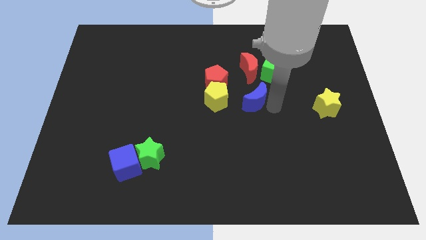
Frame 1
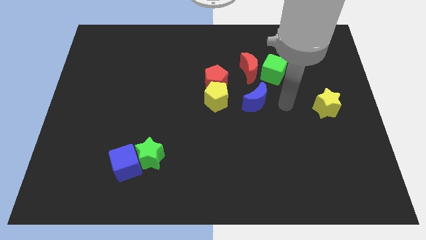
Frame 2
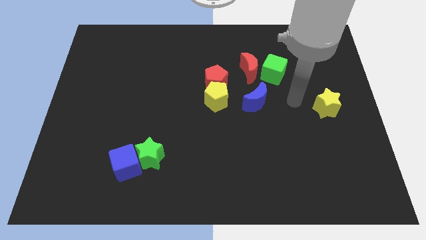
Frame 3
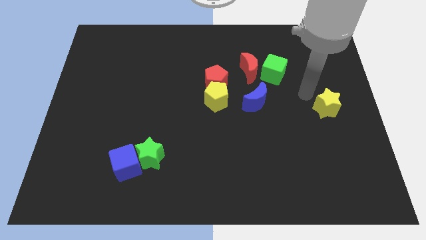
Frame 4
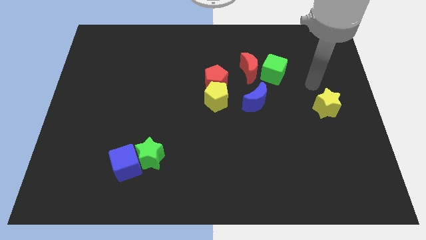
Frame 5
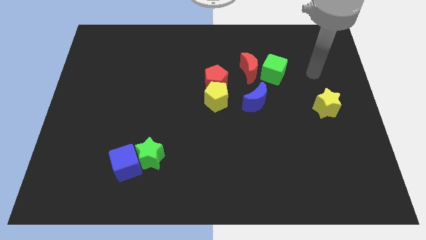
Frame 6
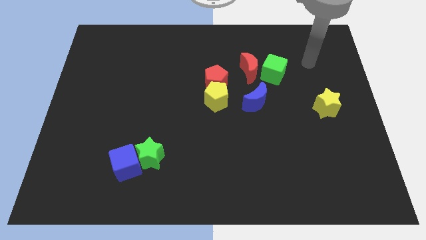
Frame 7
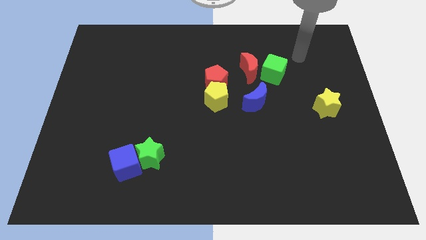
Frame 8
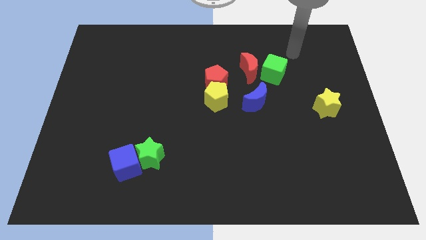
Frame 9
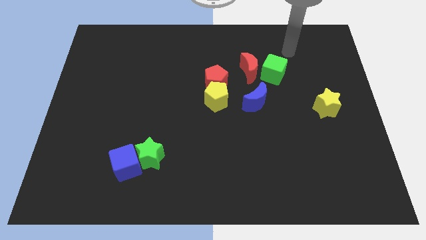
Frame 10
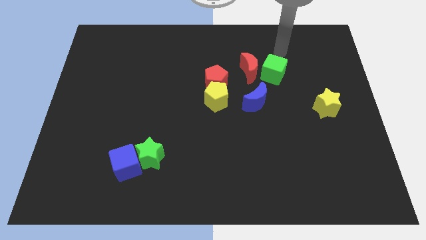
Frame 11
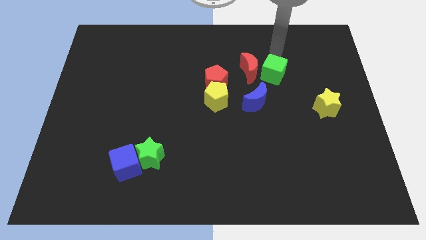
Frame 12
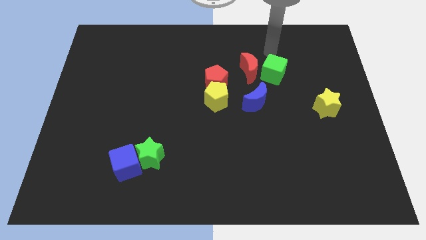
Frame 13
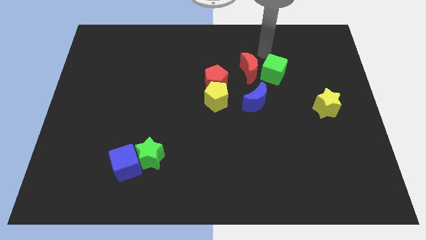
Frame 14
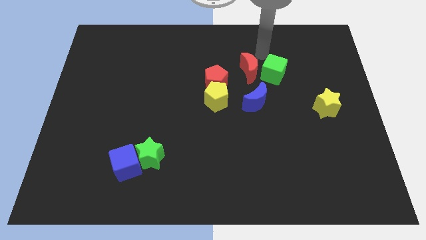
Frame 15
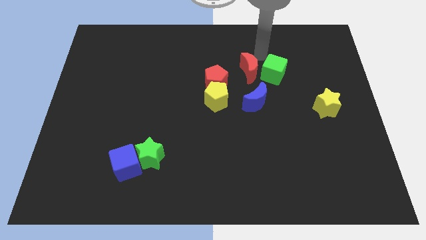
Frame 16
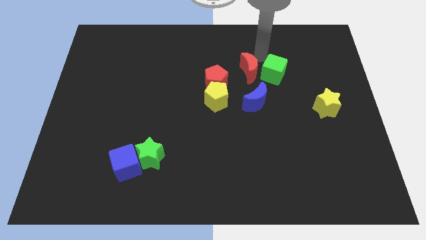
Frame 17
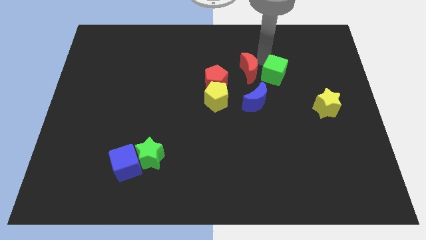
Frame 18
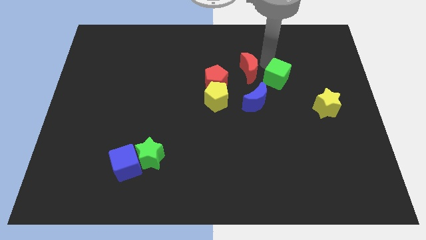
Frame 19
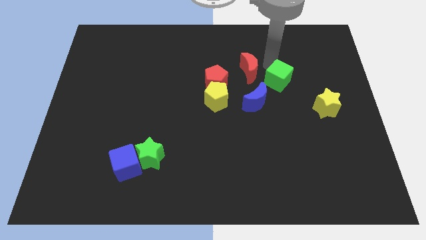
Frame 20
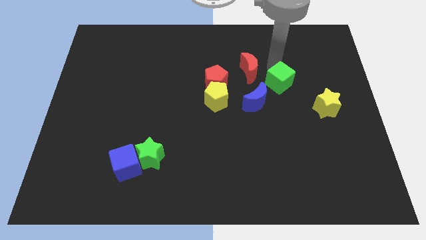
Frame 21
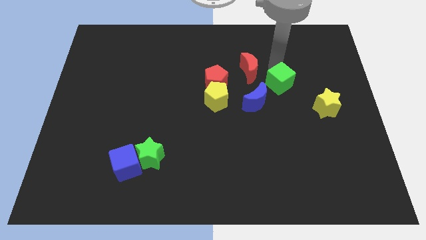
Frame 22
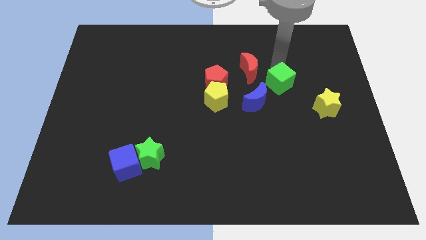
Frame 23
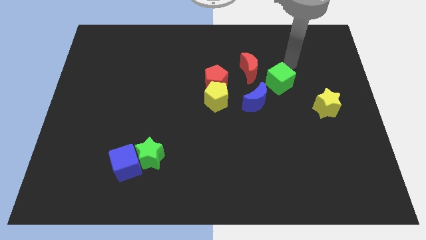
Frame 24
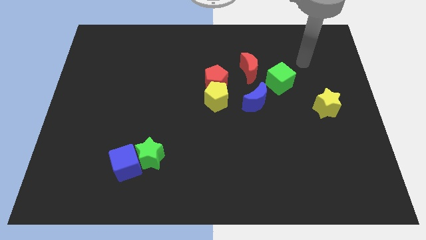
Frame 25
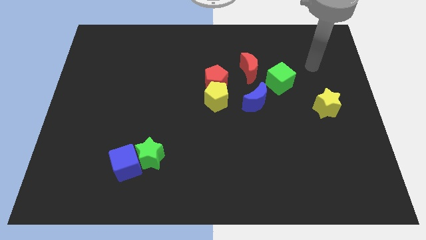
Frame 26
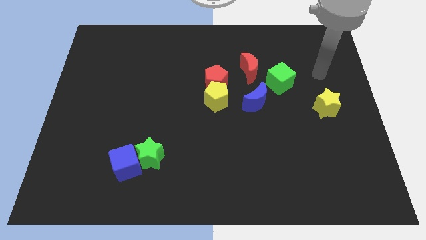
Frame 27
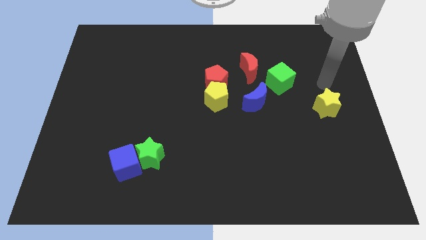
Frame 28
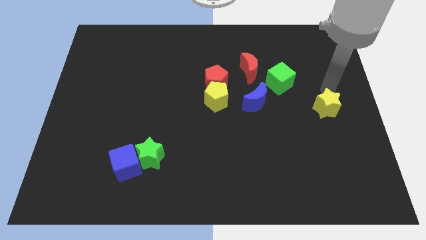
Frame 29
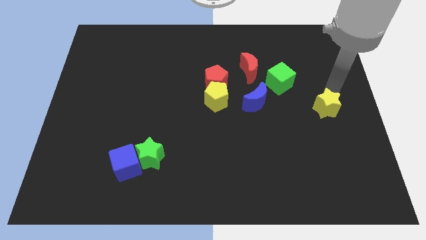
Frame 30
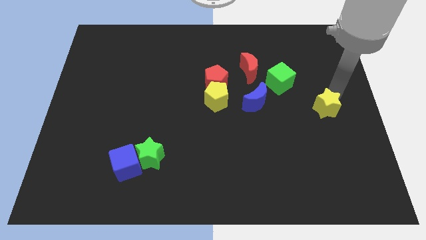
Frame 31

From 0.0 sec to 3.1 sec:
push the green cube slightly away from the red moon

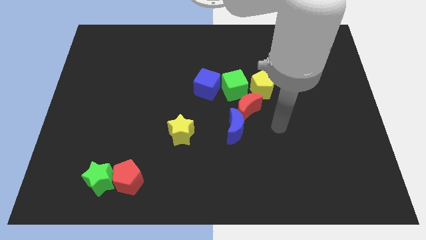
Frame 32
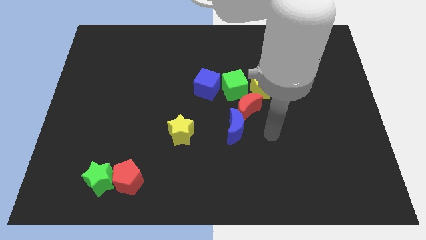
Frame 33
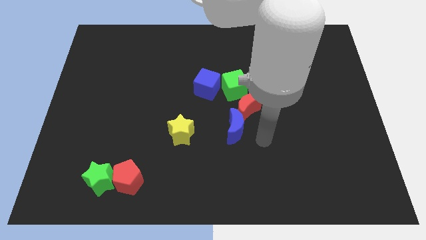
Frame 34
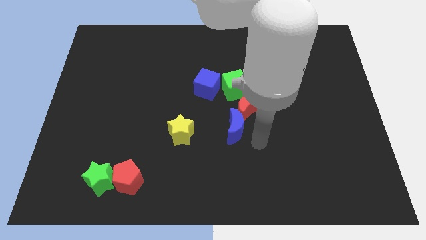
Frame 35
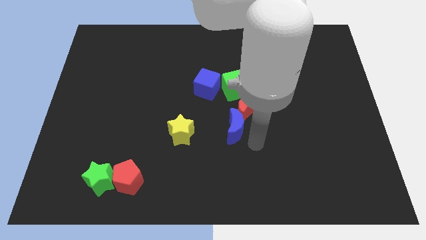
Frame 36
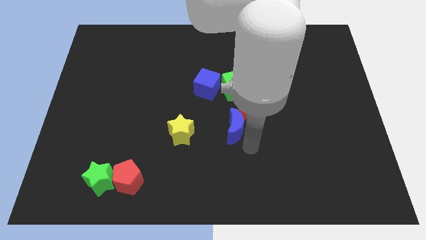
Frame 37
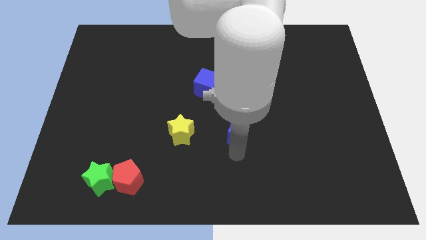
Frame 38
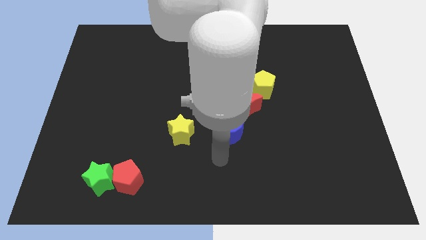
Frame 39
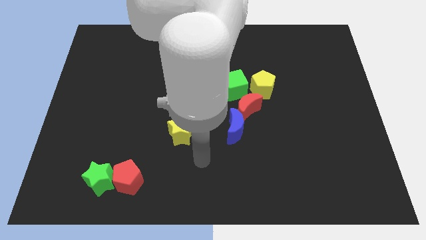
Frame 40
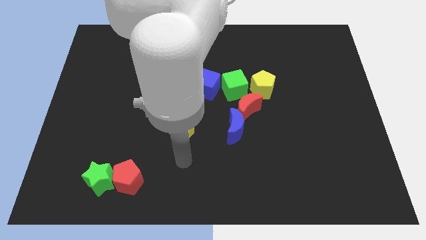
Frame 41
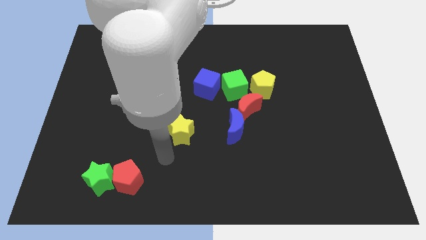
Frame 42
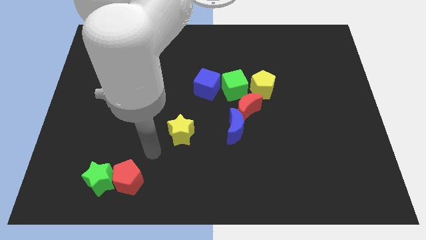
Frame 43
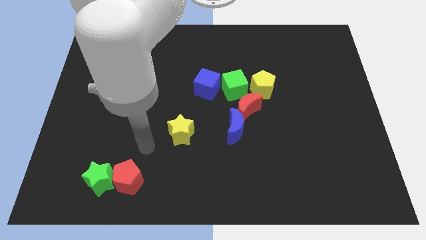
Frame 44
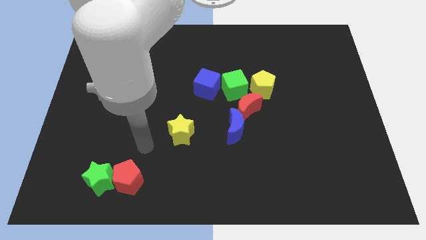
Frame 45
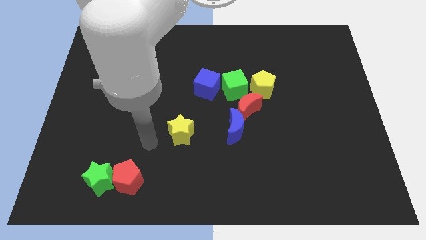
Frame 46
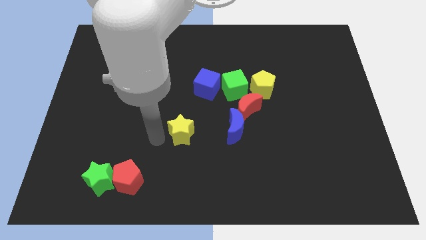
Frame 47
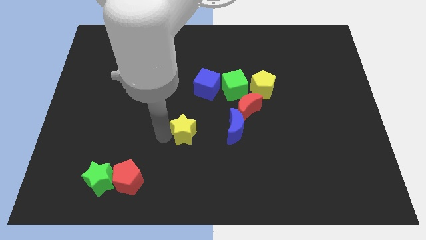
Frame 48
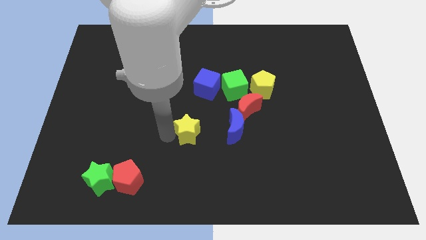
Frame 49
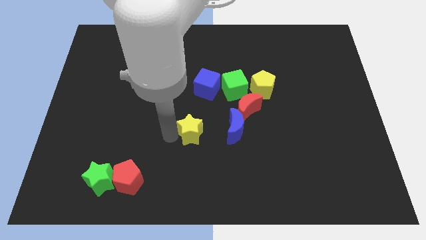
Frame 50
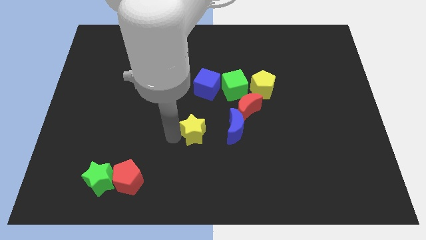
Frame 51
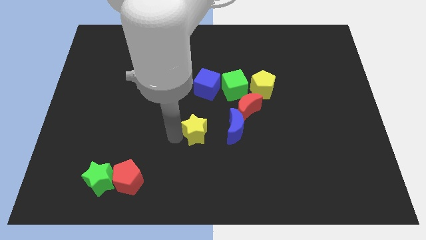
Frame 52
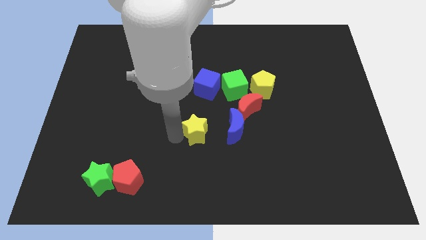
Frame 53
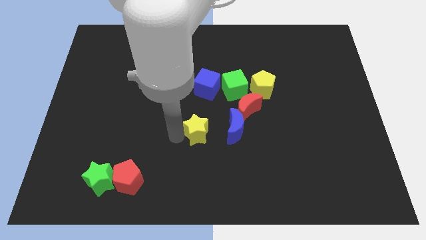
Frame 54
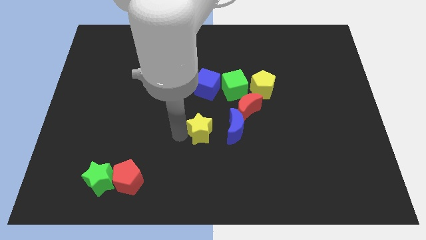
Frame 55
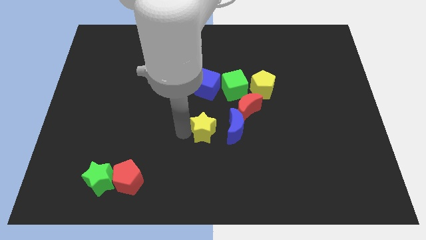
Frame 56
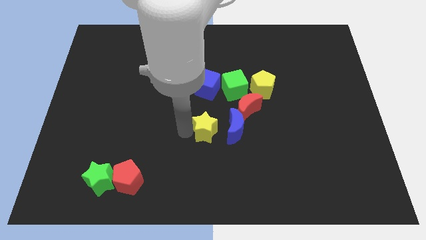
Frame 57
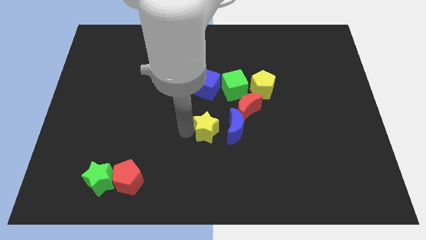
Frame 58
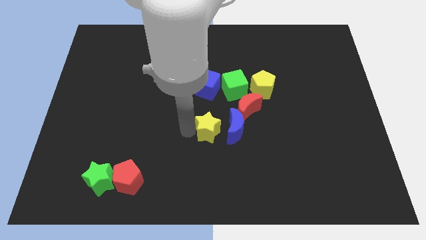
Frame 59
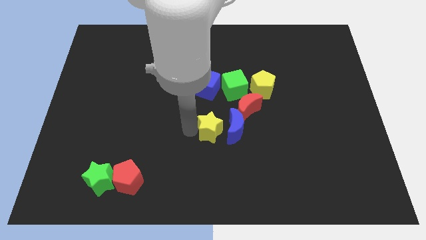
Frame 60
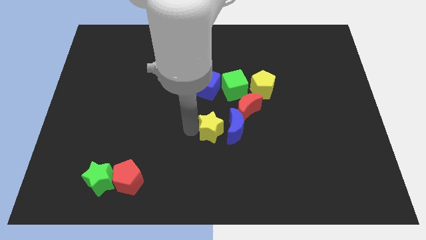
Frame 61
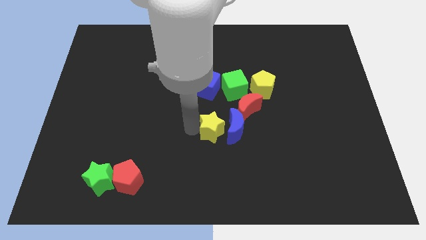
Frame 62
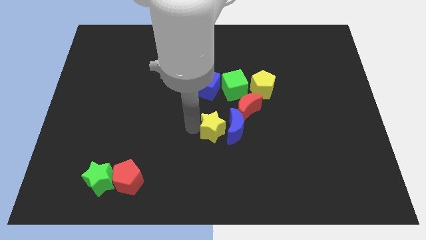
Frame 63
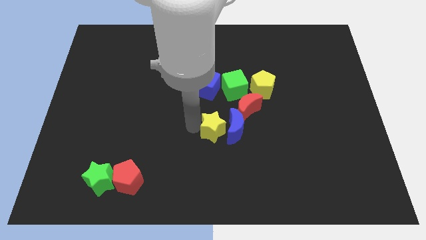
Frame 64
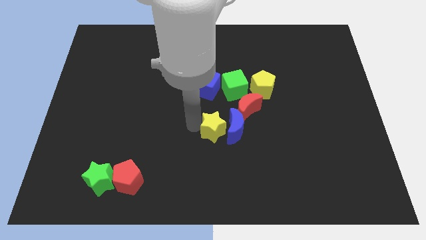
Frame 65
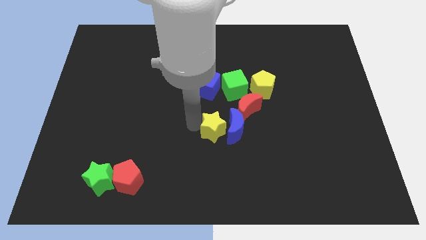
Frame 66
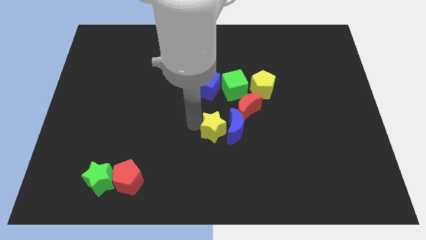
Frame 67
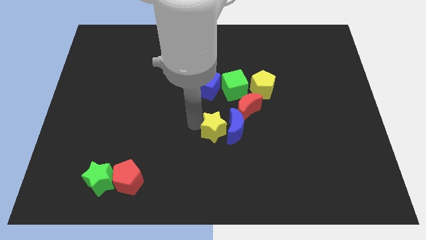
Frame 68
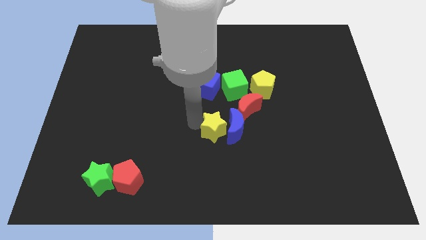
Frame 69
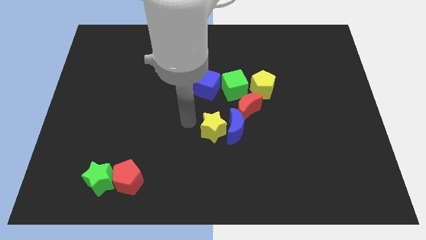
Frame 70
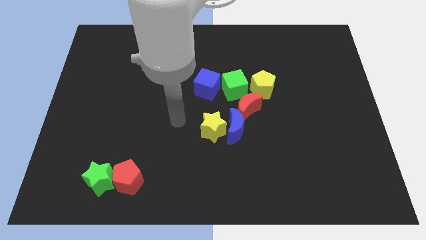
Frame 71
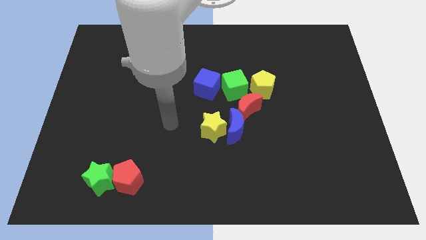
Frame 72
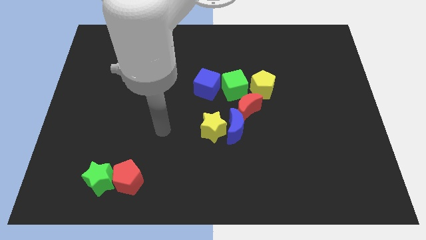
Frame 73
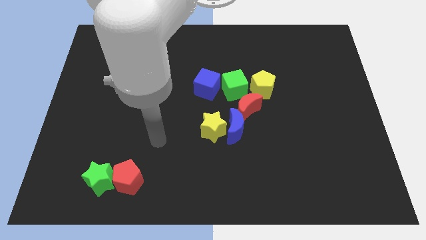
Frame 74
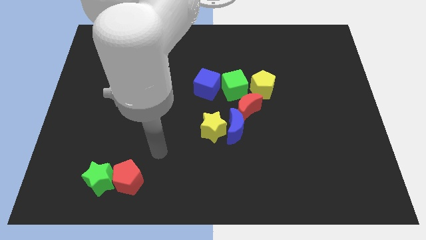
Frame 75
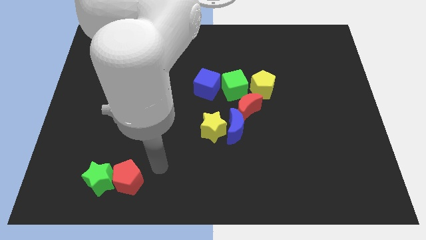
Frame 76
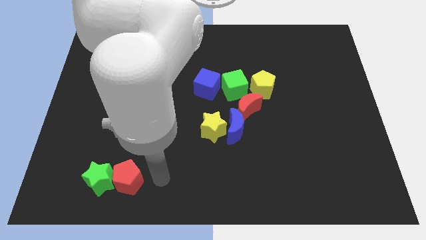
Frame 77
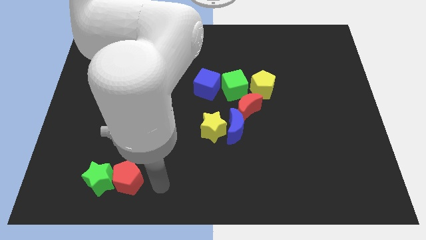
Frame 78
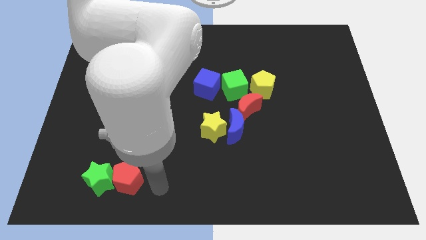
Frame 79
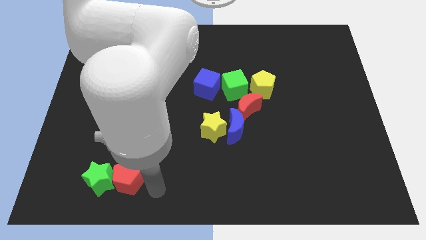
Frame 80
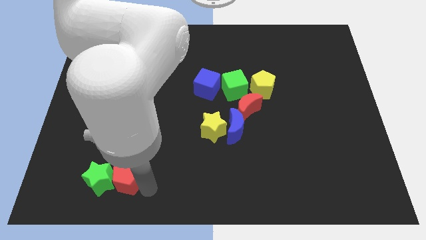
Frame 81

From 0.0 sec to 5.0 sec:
move the yellow star to the left of the blue moon

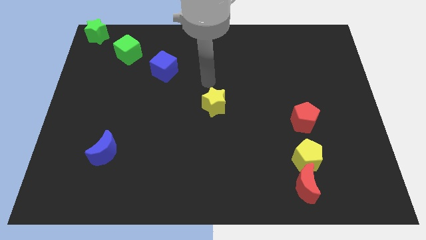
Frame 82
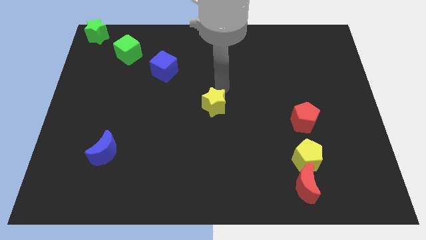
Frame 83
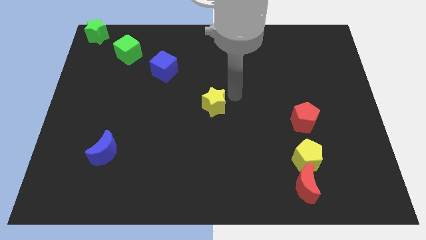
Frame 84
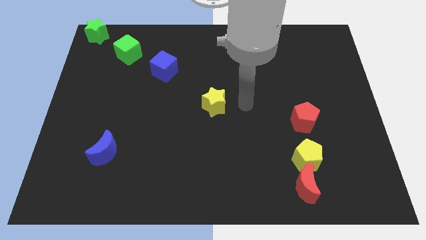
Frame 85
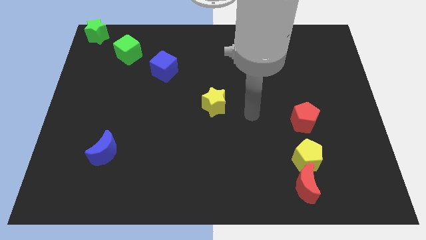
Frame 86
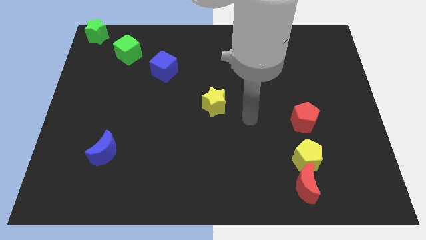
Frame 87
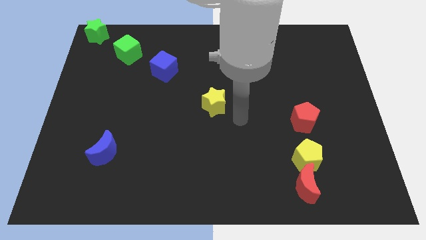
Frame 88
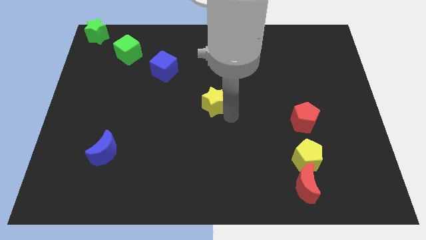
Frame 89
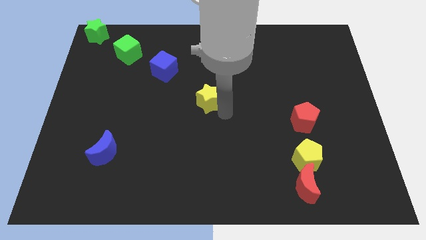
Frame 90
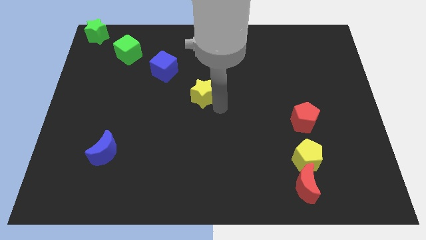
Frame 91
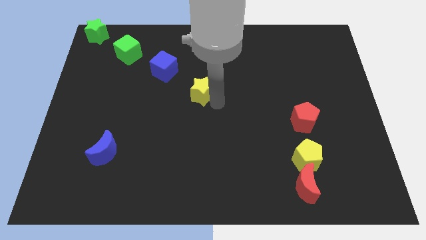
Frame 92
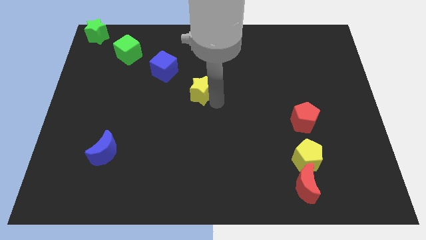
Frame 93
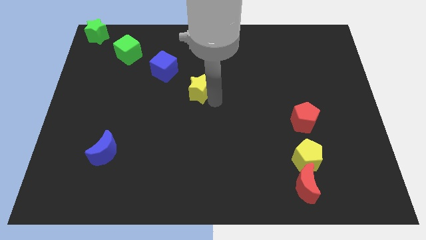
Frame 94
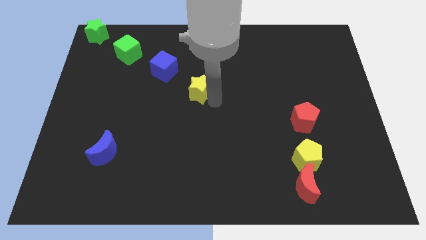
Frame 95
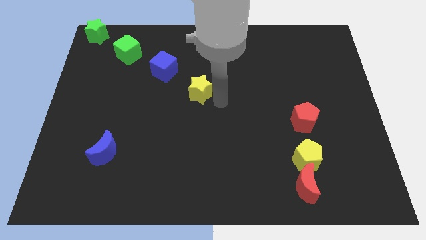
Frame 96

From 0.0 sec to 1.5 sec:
place the yellow star diagonal to the blue cube at the bottom right side
